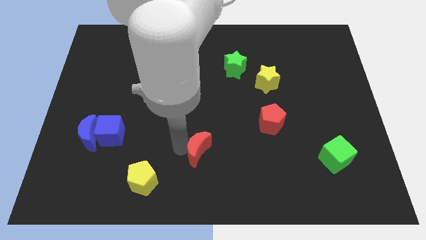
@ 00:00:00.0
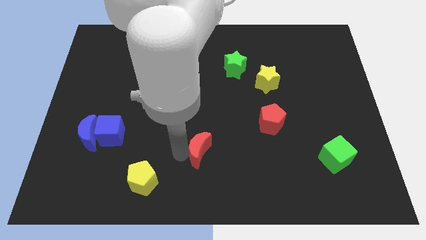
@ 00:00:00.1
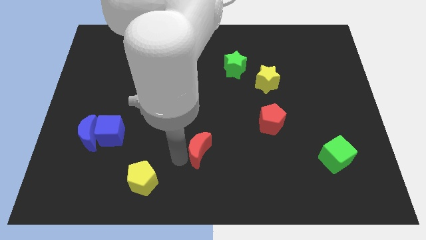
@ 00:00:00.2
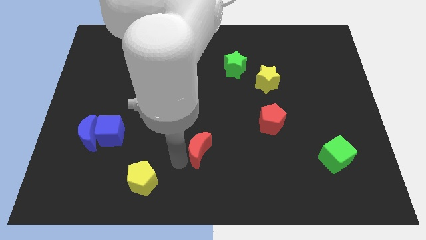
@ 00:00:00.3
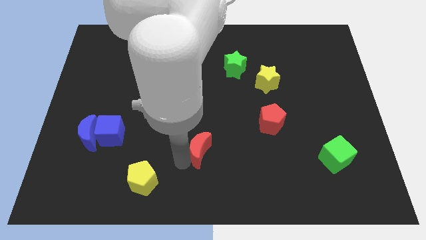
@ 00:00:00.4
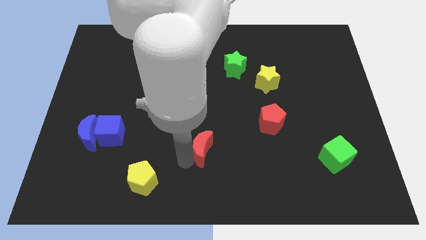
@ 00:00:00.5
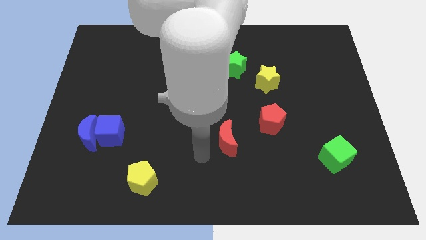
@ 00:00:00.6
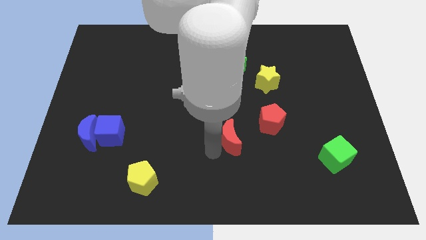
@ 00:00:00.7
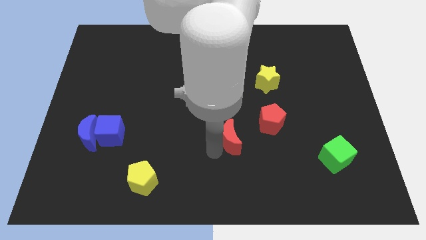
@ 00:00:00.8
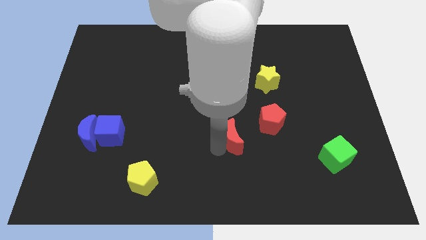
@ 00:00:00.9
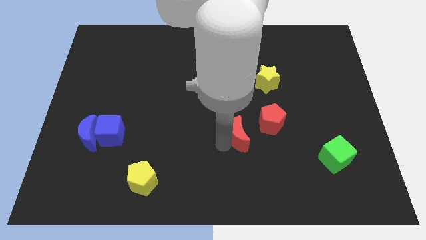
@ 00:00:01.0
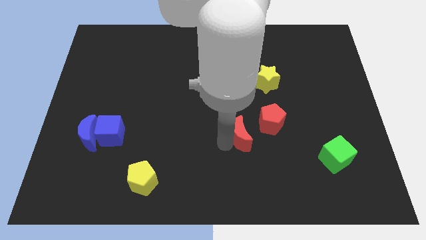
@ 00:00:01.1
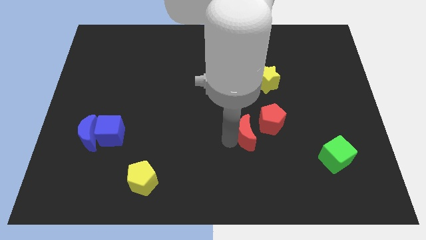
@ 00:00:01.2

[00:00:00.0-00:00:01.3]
slide the red moon close to the red pentagon

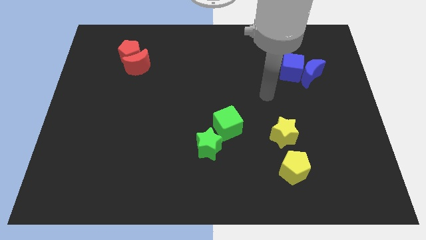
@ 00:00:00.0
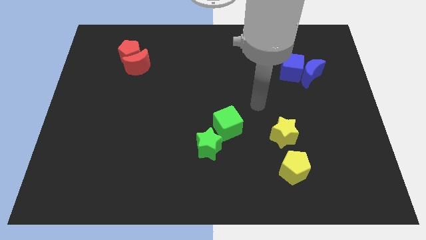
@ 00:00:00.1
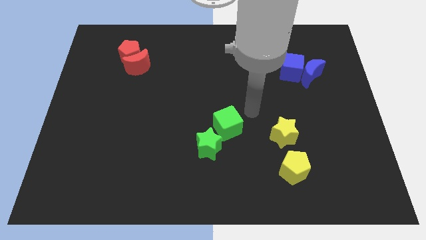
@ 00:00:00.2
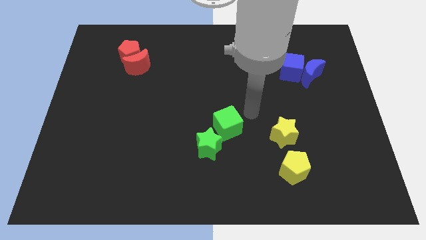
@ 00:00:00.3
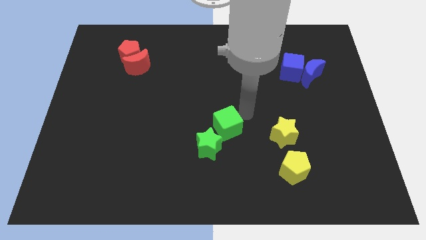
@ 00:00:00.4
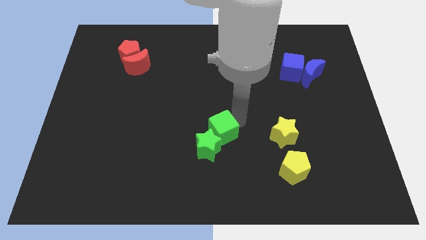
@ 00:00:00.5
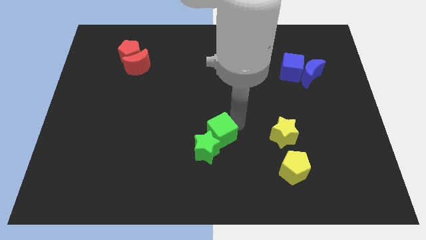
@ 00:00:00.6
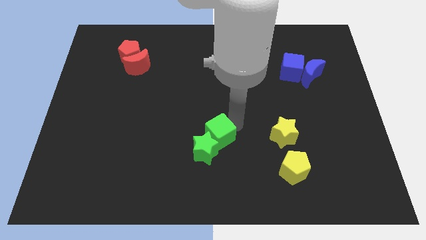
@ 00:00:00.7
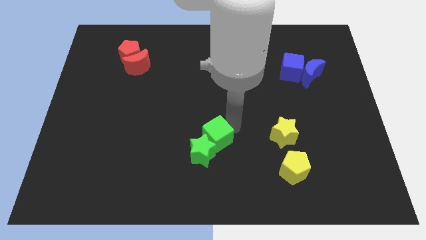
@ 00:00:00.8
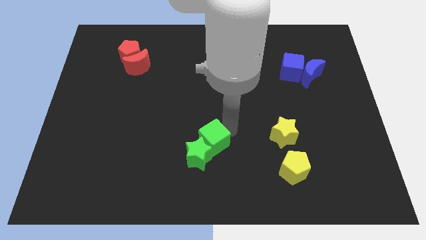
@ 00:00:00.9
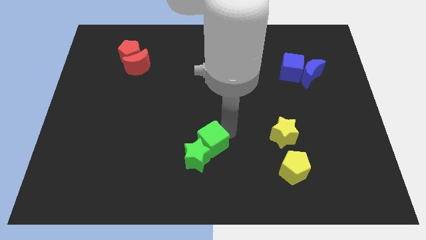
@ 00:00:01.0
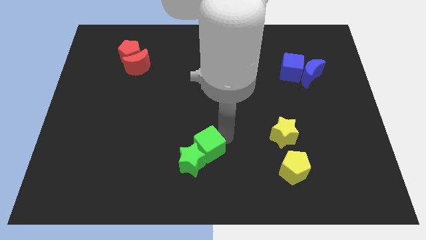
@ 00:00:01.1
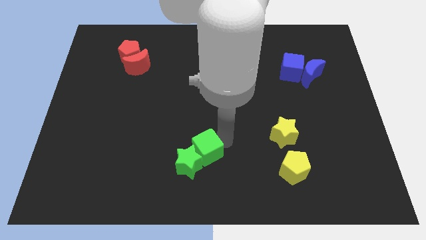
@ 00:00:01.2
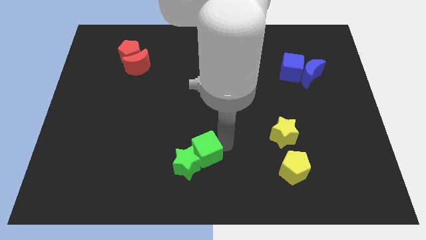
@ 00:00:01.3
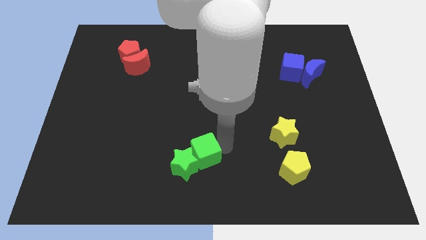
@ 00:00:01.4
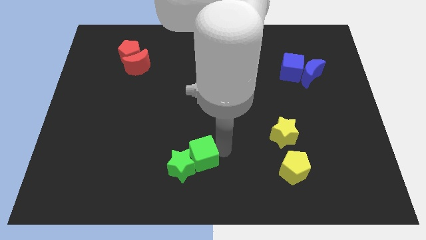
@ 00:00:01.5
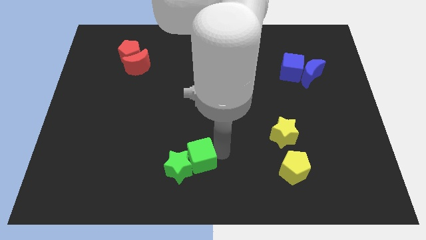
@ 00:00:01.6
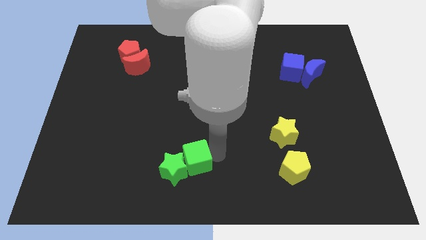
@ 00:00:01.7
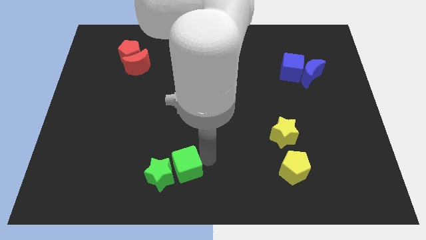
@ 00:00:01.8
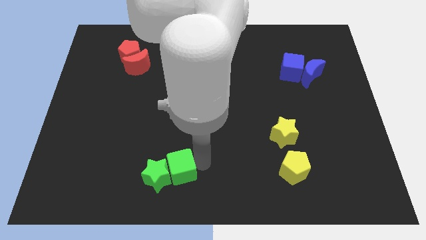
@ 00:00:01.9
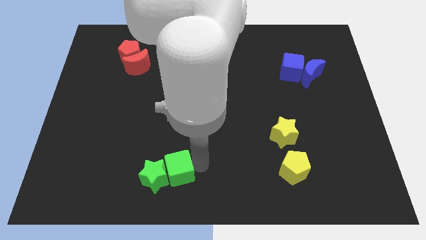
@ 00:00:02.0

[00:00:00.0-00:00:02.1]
push two green blocks to left

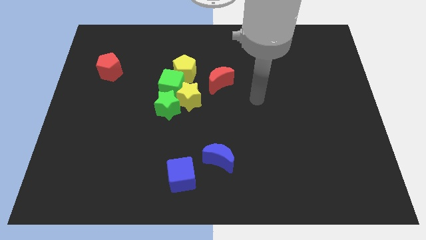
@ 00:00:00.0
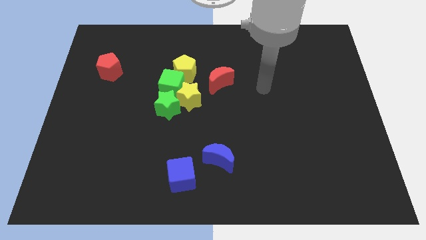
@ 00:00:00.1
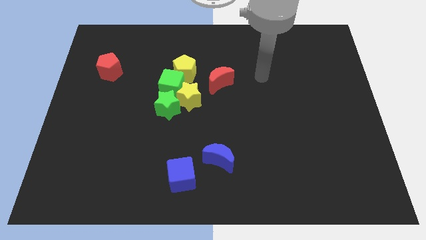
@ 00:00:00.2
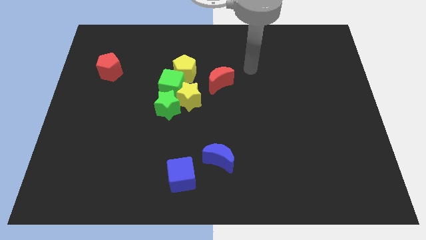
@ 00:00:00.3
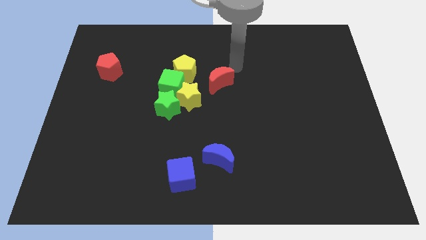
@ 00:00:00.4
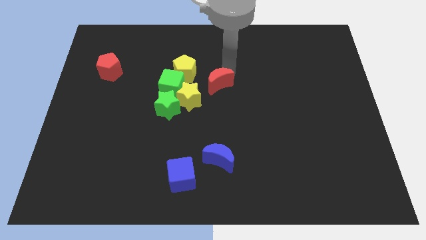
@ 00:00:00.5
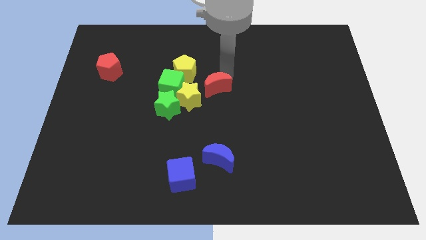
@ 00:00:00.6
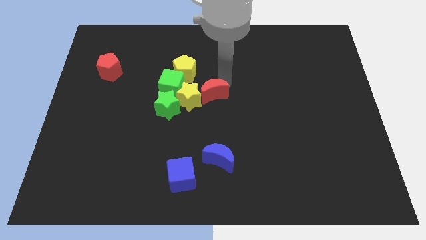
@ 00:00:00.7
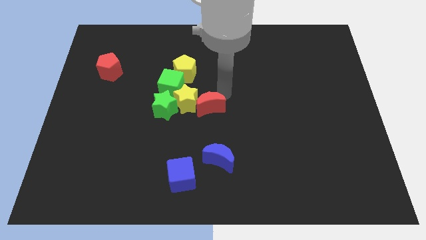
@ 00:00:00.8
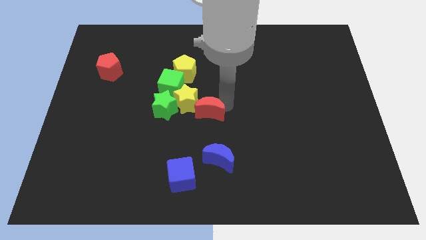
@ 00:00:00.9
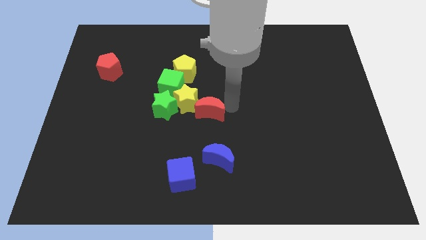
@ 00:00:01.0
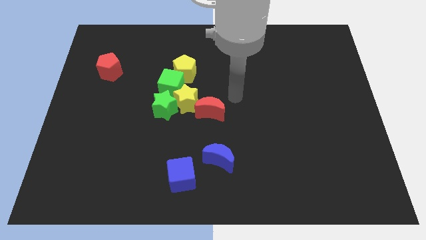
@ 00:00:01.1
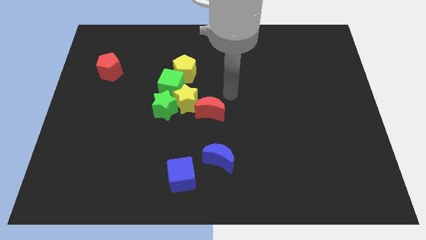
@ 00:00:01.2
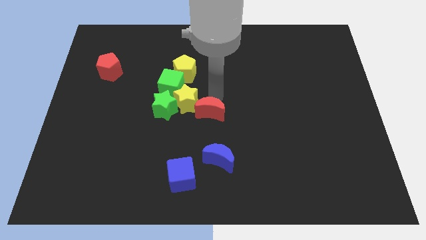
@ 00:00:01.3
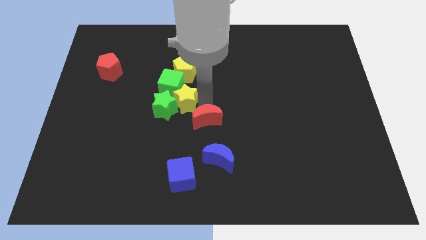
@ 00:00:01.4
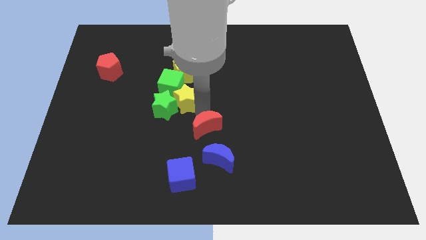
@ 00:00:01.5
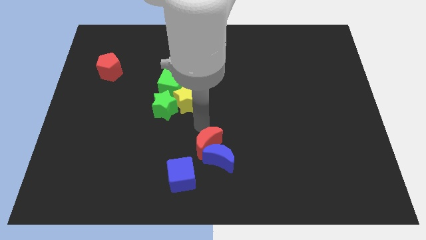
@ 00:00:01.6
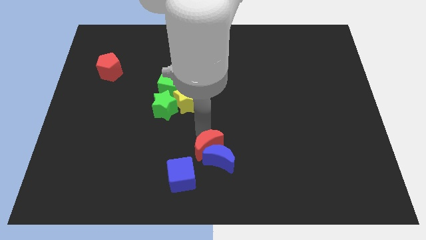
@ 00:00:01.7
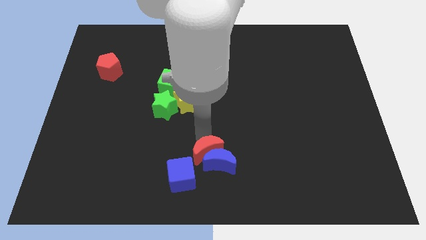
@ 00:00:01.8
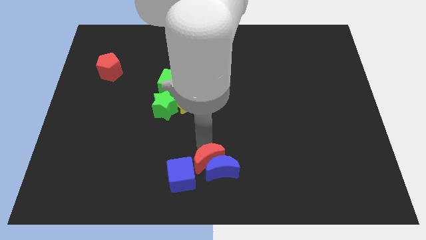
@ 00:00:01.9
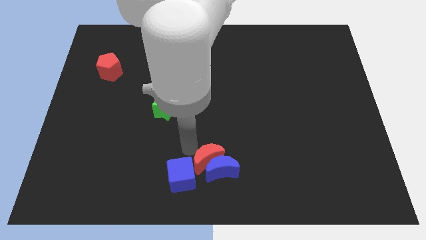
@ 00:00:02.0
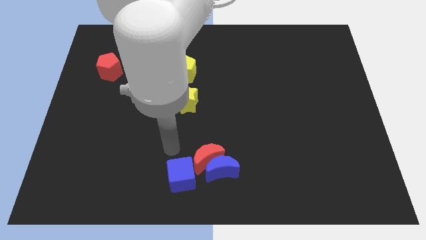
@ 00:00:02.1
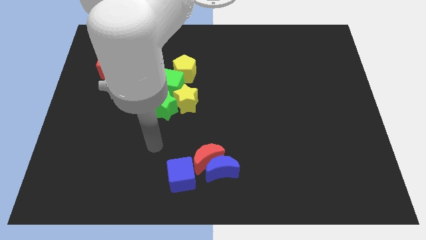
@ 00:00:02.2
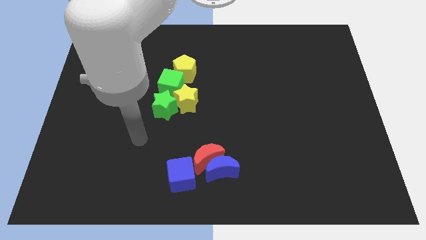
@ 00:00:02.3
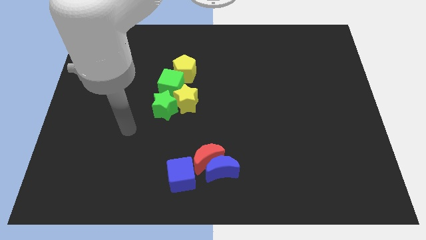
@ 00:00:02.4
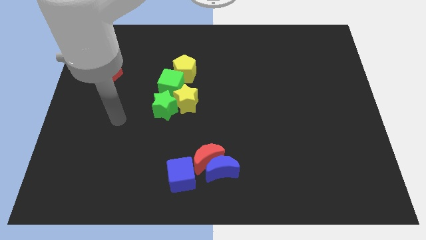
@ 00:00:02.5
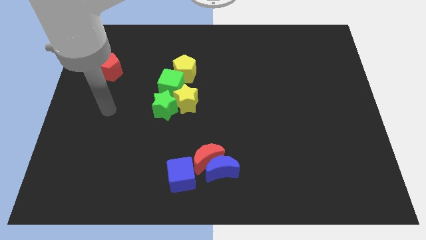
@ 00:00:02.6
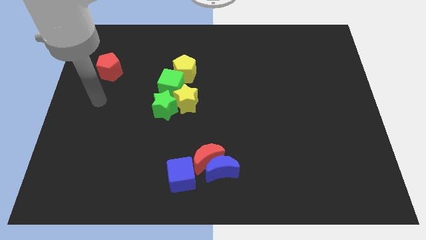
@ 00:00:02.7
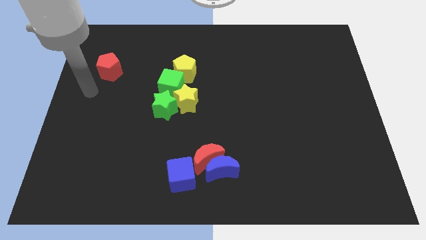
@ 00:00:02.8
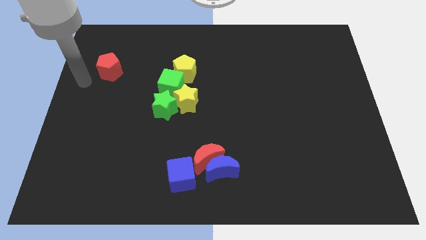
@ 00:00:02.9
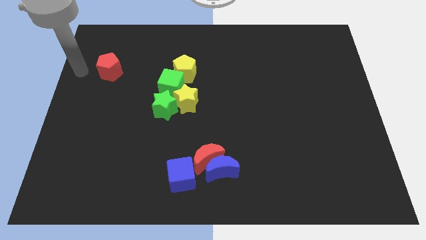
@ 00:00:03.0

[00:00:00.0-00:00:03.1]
slide red moon into blue blocks

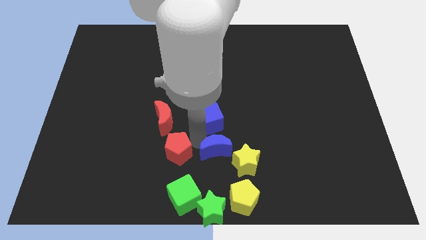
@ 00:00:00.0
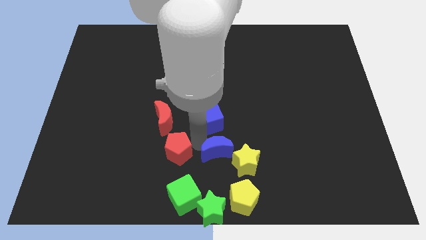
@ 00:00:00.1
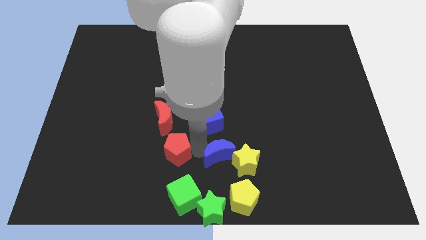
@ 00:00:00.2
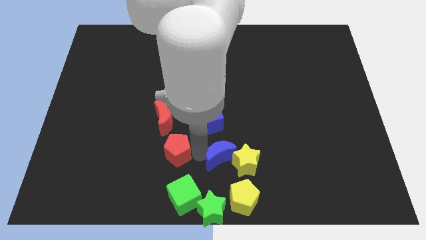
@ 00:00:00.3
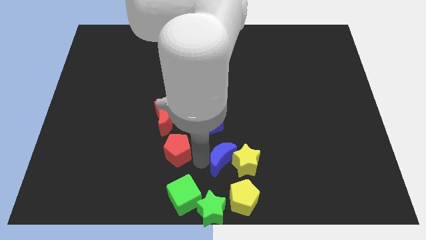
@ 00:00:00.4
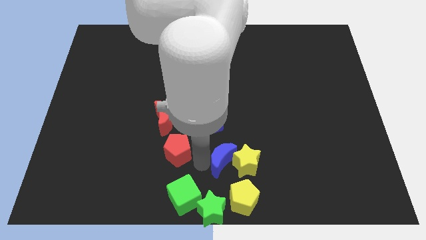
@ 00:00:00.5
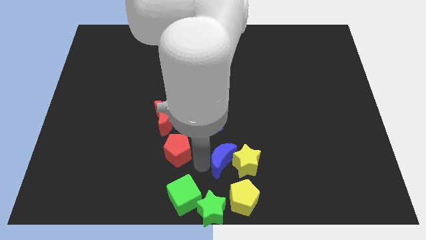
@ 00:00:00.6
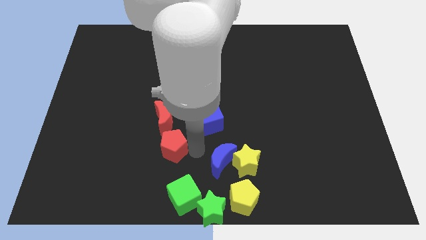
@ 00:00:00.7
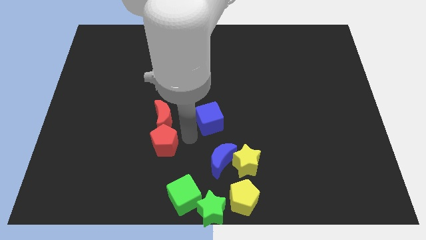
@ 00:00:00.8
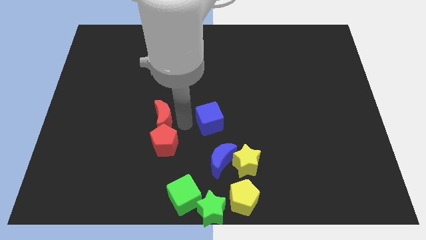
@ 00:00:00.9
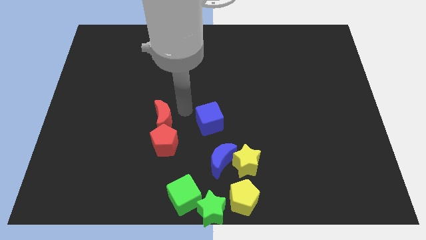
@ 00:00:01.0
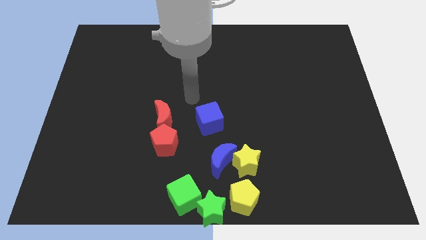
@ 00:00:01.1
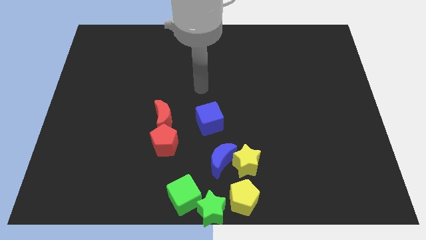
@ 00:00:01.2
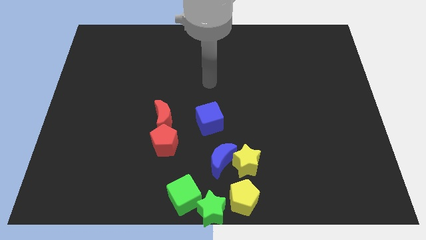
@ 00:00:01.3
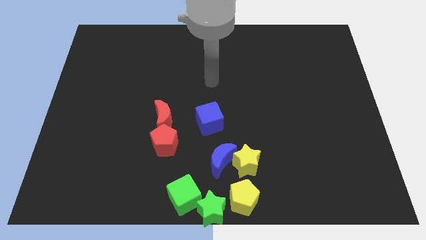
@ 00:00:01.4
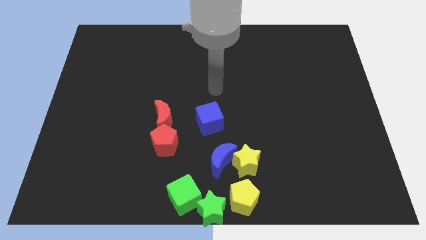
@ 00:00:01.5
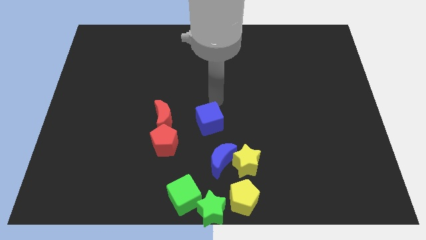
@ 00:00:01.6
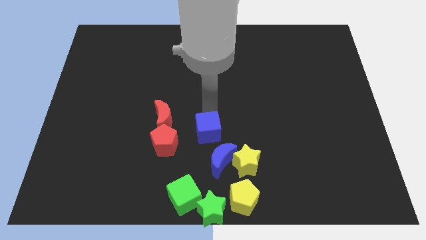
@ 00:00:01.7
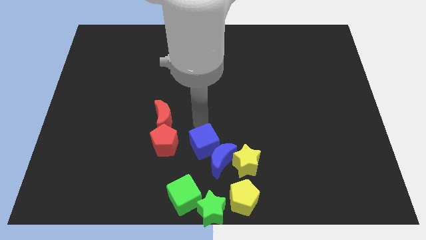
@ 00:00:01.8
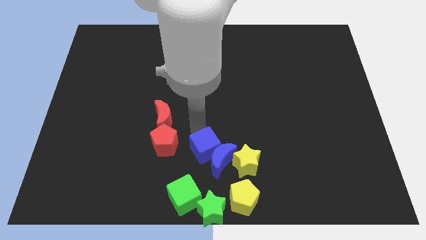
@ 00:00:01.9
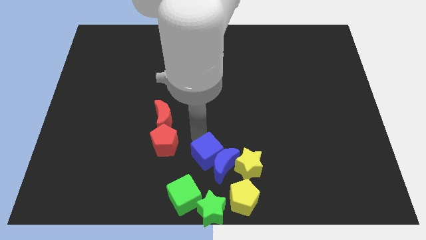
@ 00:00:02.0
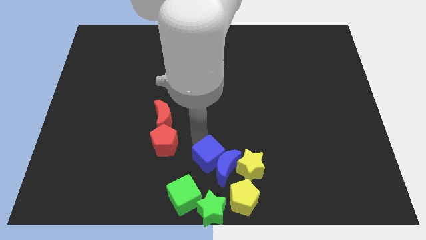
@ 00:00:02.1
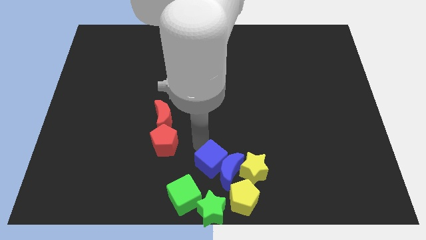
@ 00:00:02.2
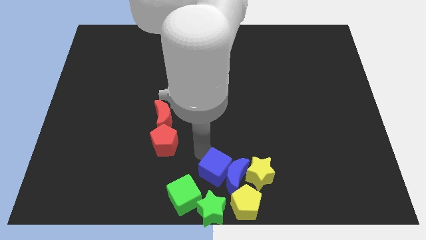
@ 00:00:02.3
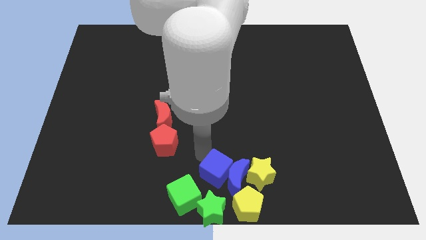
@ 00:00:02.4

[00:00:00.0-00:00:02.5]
push the blue blocks into yellow blocks
